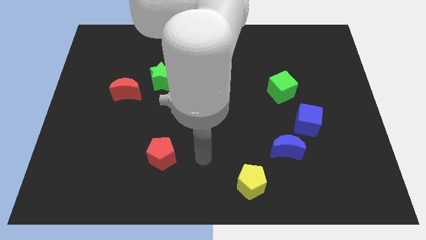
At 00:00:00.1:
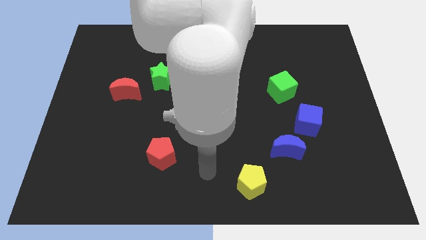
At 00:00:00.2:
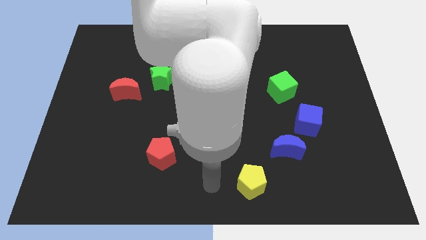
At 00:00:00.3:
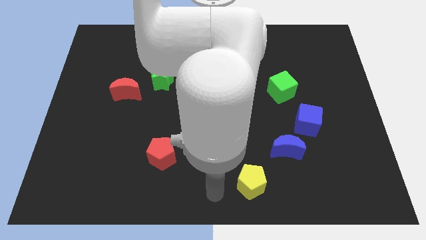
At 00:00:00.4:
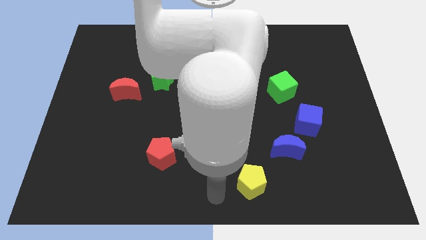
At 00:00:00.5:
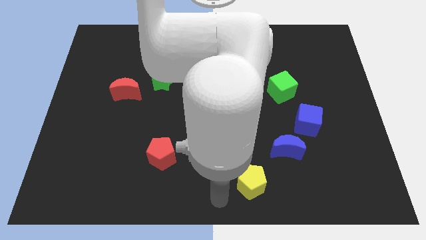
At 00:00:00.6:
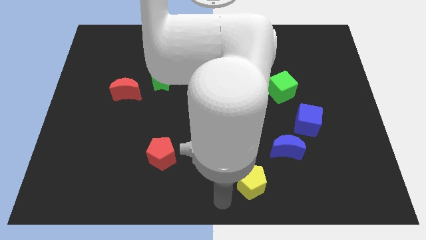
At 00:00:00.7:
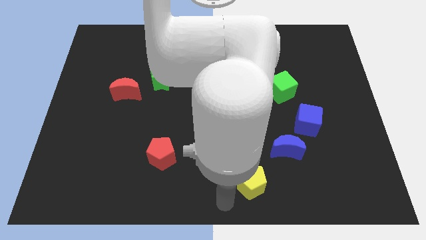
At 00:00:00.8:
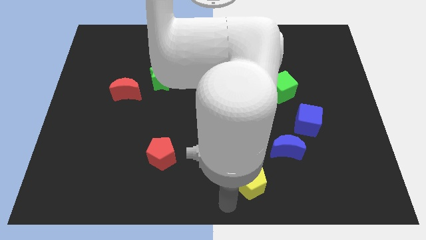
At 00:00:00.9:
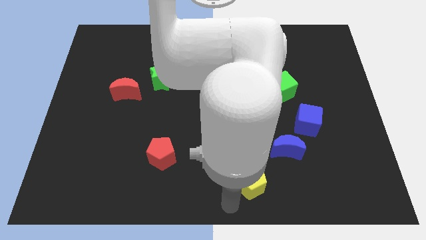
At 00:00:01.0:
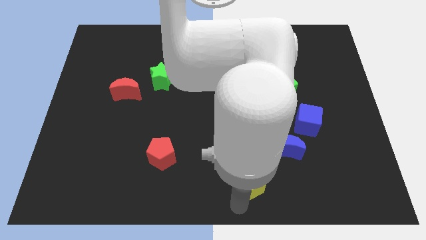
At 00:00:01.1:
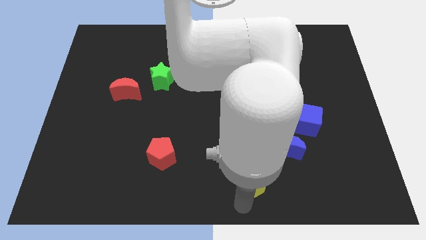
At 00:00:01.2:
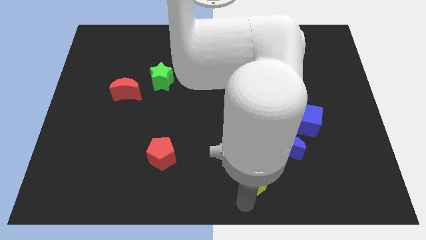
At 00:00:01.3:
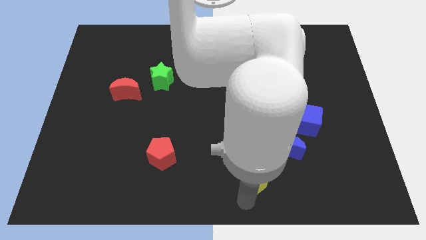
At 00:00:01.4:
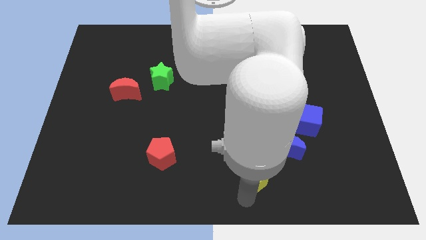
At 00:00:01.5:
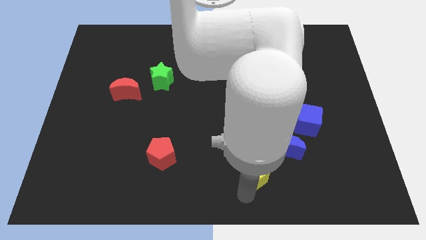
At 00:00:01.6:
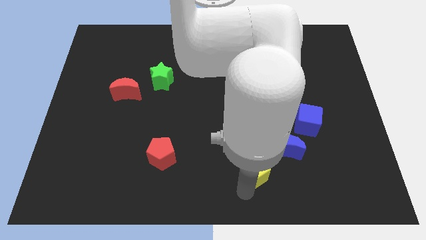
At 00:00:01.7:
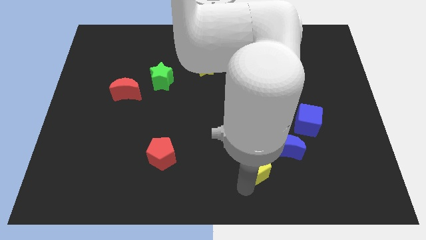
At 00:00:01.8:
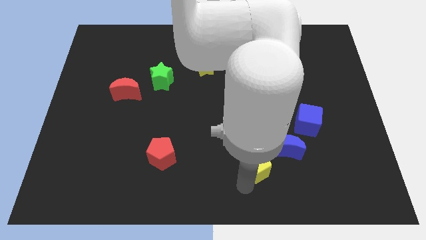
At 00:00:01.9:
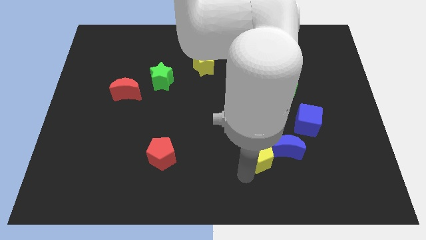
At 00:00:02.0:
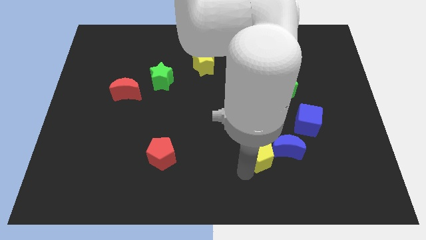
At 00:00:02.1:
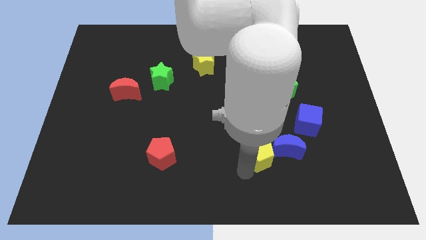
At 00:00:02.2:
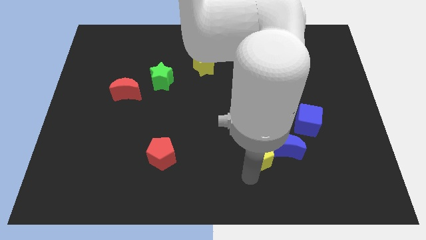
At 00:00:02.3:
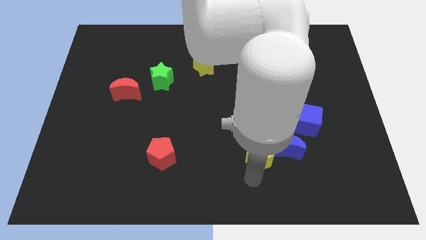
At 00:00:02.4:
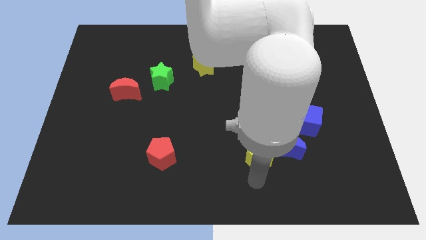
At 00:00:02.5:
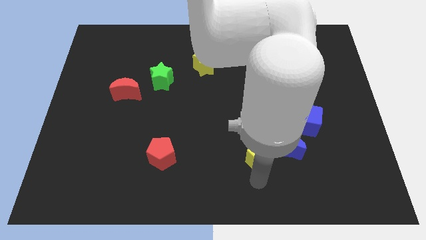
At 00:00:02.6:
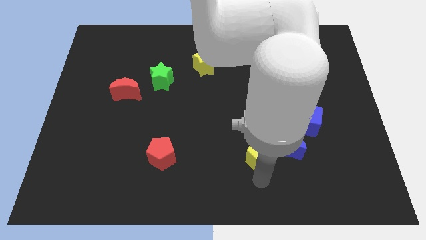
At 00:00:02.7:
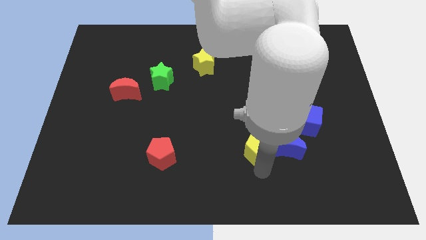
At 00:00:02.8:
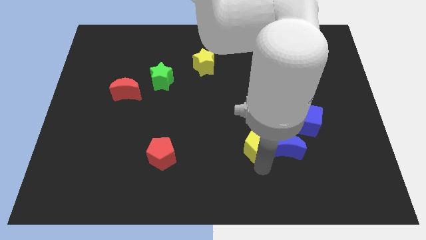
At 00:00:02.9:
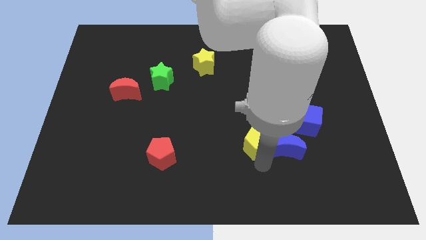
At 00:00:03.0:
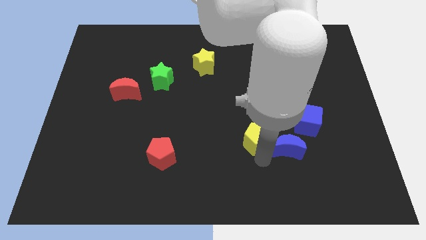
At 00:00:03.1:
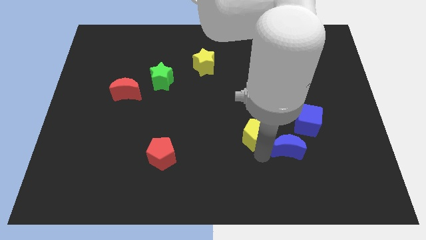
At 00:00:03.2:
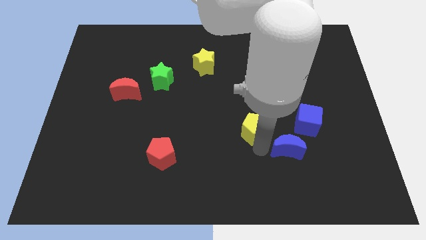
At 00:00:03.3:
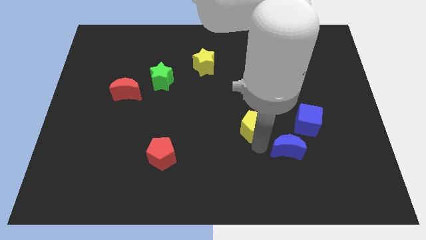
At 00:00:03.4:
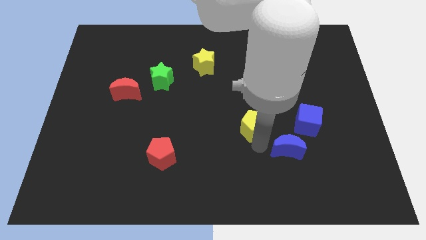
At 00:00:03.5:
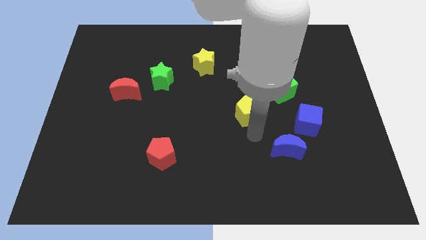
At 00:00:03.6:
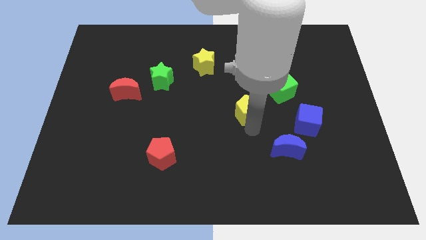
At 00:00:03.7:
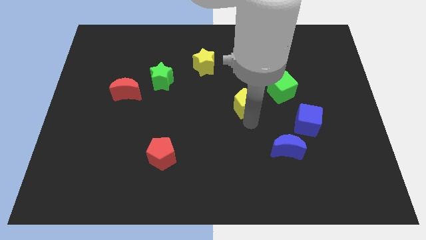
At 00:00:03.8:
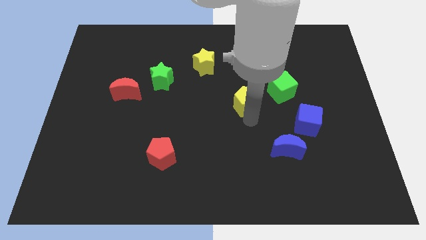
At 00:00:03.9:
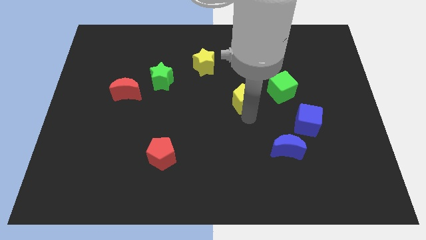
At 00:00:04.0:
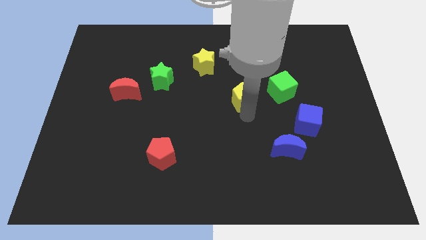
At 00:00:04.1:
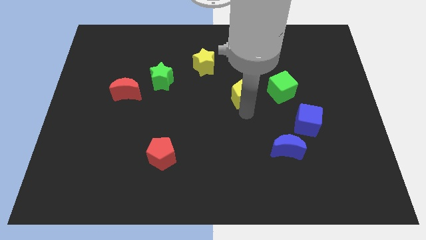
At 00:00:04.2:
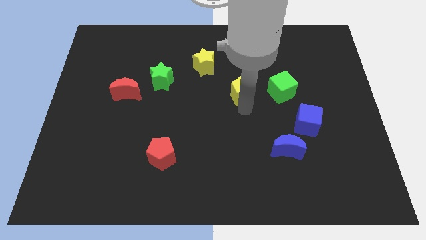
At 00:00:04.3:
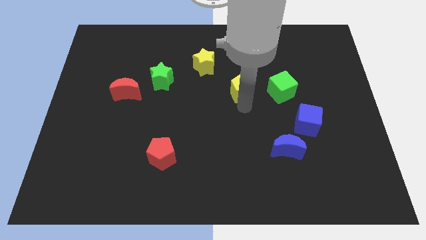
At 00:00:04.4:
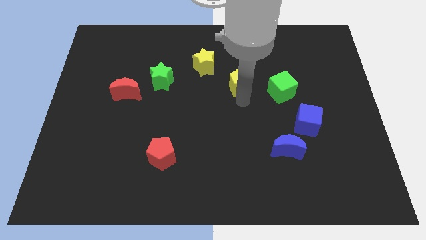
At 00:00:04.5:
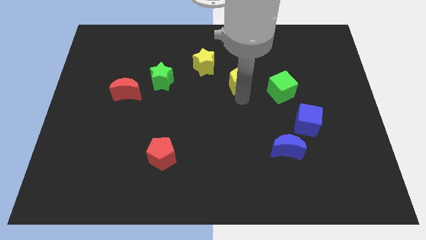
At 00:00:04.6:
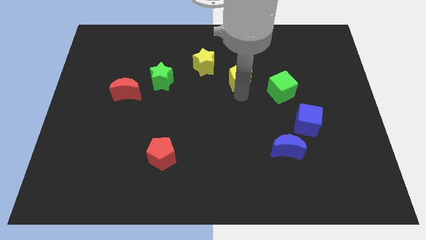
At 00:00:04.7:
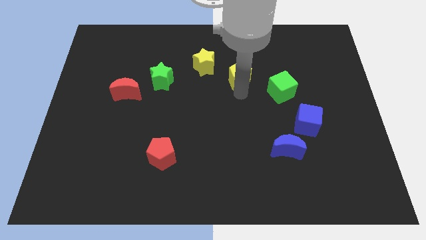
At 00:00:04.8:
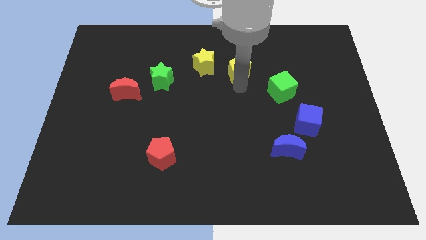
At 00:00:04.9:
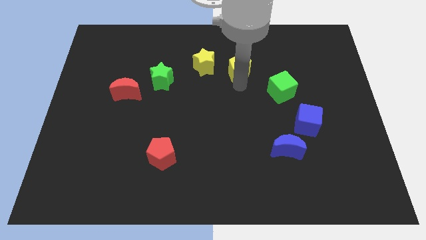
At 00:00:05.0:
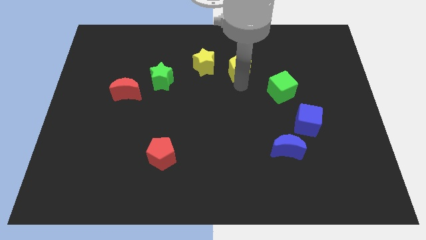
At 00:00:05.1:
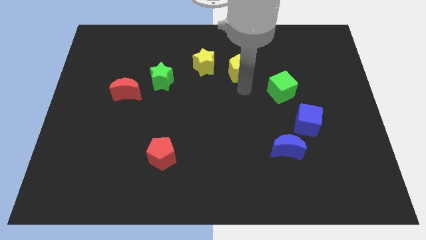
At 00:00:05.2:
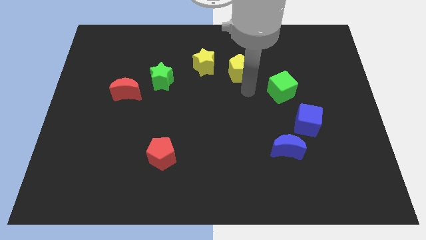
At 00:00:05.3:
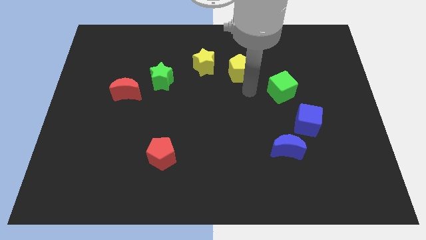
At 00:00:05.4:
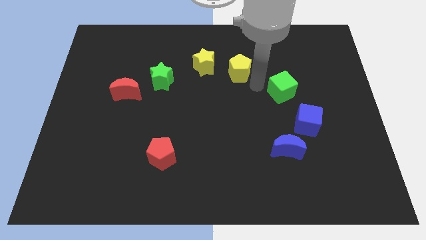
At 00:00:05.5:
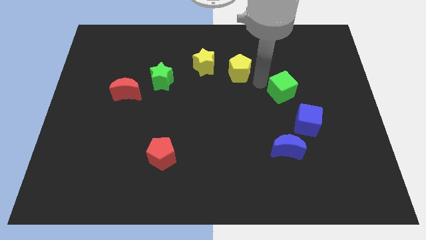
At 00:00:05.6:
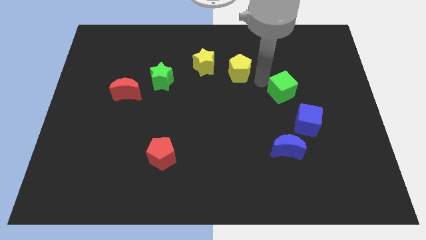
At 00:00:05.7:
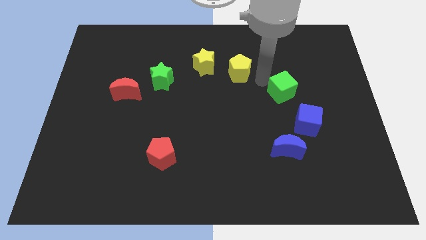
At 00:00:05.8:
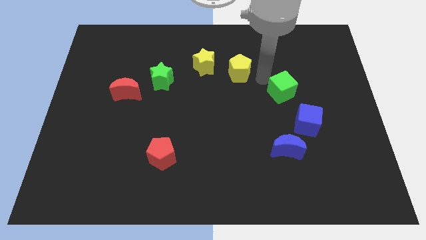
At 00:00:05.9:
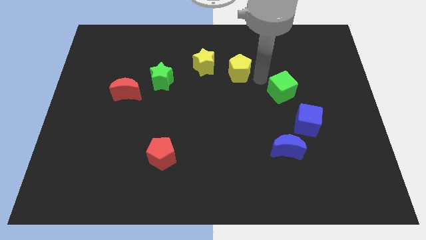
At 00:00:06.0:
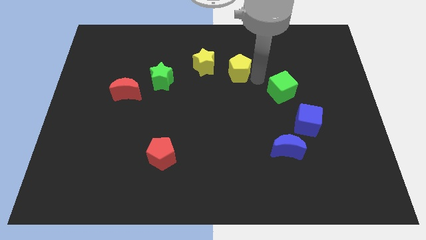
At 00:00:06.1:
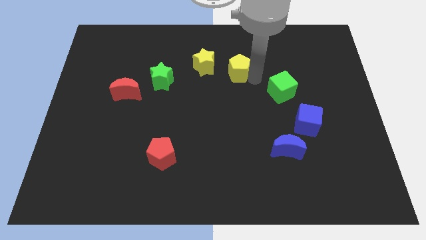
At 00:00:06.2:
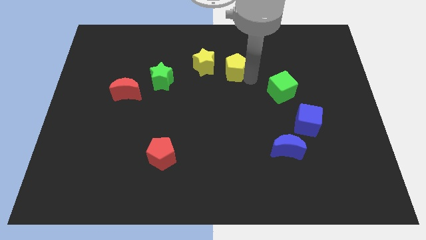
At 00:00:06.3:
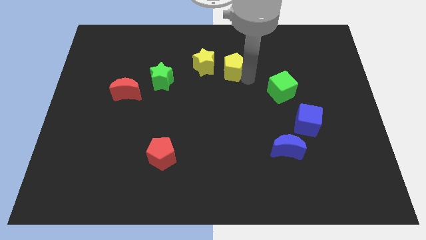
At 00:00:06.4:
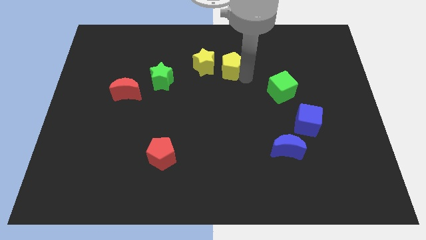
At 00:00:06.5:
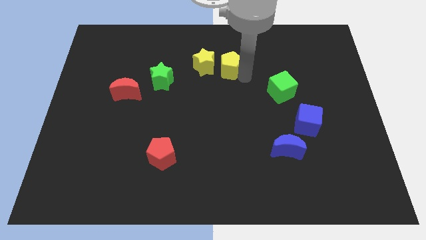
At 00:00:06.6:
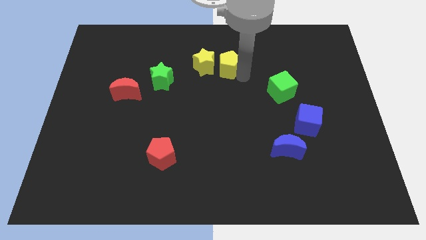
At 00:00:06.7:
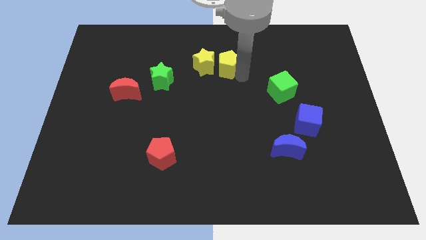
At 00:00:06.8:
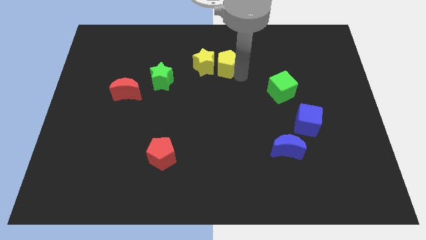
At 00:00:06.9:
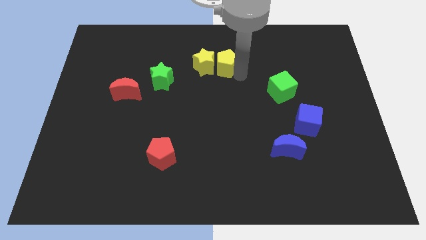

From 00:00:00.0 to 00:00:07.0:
move the yellow pentagon close to the yellow star

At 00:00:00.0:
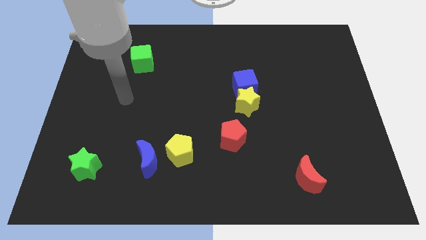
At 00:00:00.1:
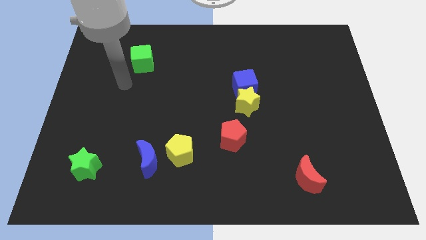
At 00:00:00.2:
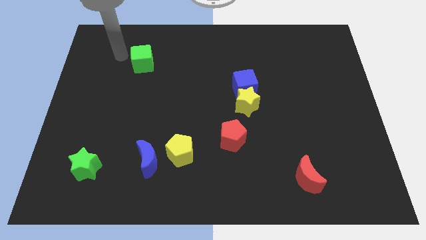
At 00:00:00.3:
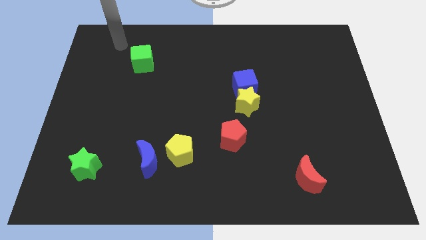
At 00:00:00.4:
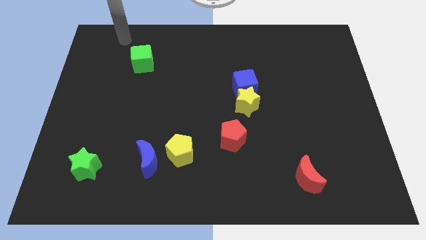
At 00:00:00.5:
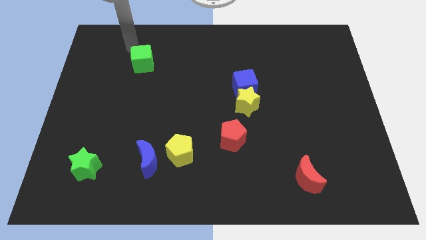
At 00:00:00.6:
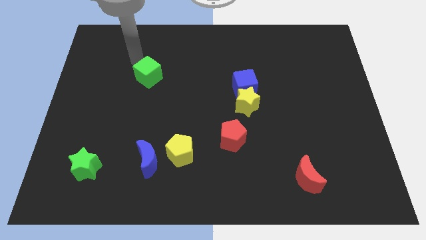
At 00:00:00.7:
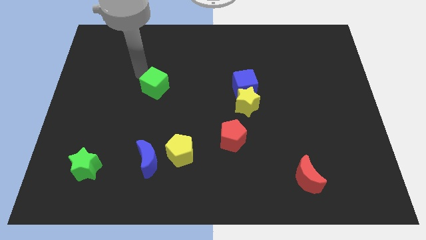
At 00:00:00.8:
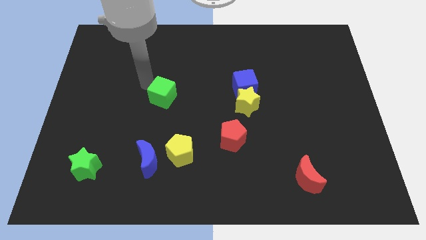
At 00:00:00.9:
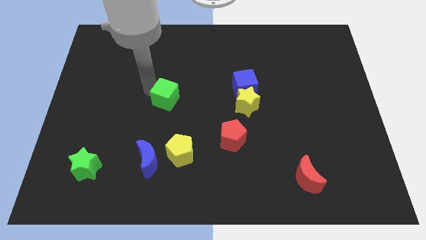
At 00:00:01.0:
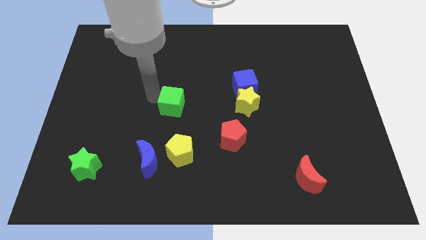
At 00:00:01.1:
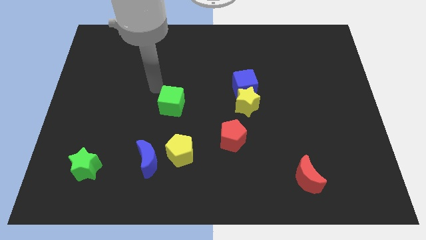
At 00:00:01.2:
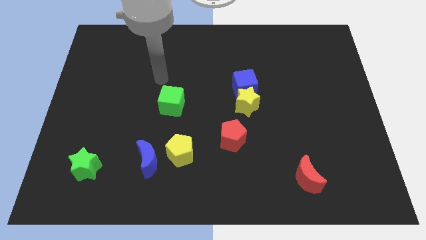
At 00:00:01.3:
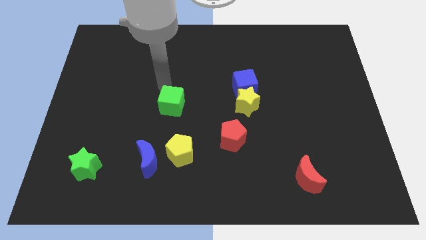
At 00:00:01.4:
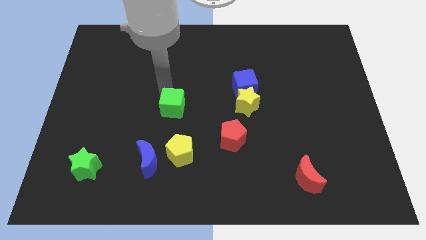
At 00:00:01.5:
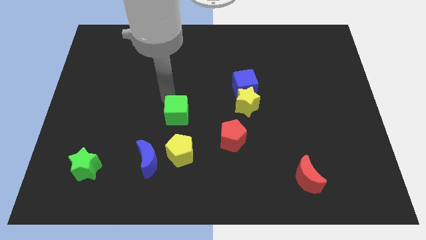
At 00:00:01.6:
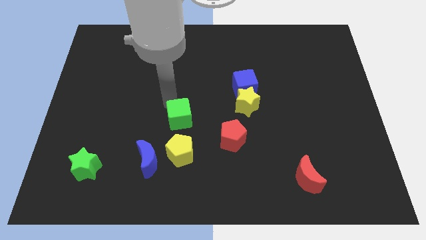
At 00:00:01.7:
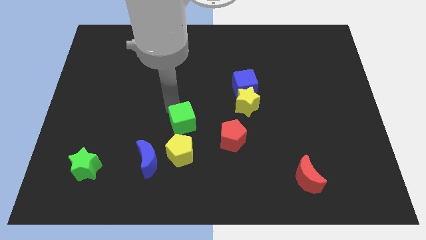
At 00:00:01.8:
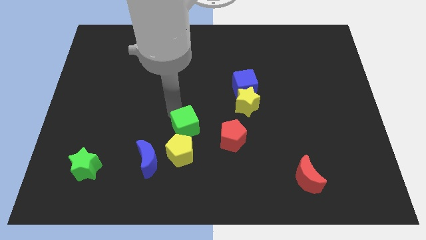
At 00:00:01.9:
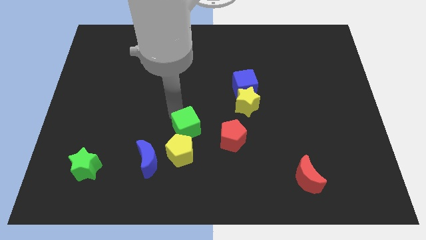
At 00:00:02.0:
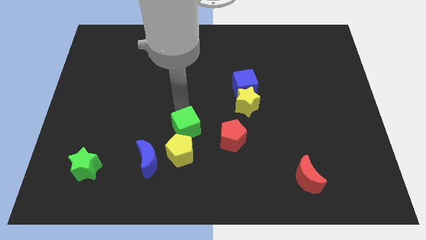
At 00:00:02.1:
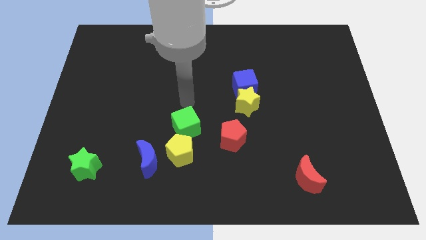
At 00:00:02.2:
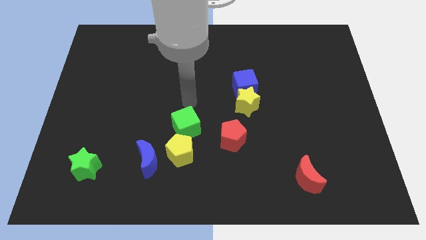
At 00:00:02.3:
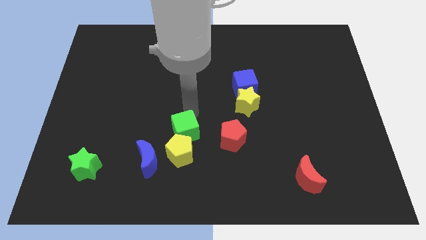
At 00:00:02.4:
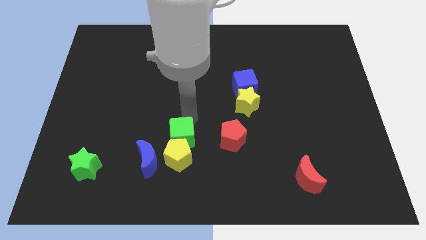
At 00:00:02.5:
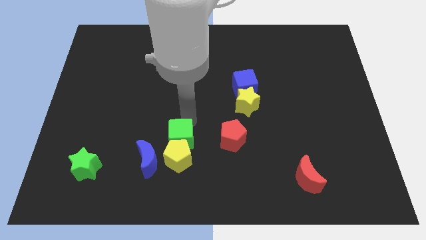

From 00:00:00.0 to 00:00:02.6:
put the green cube towards the yellow pentagon
